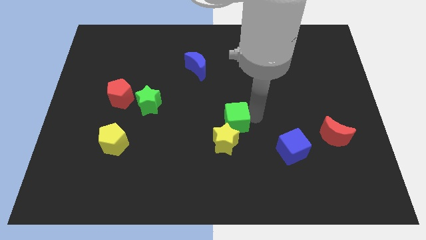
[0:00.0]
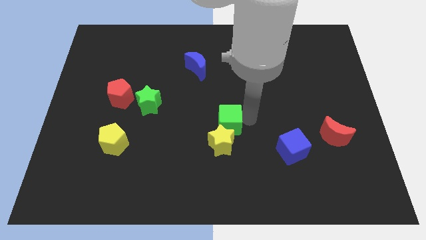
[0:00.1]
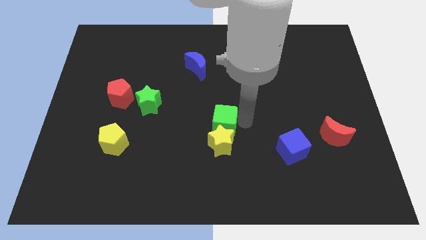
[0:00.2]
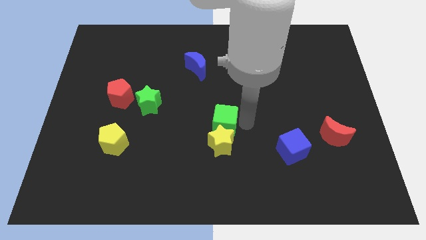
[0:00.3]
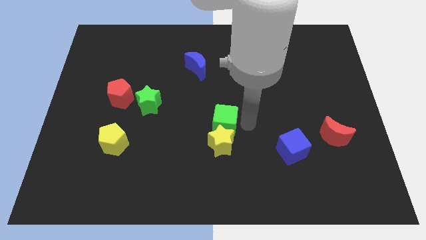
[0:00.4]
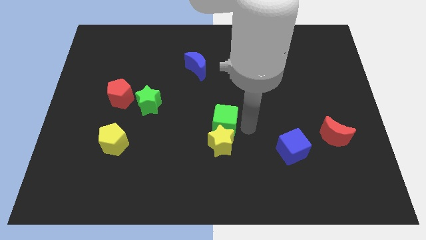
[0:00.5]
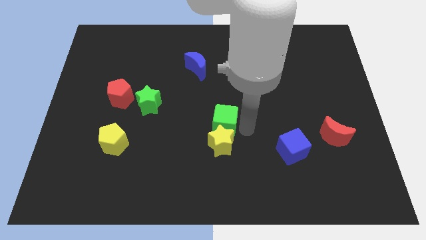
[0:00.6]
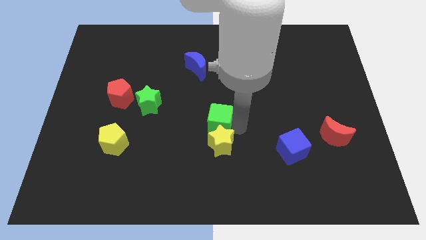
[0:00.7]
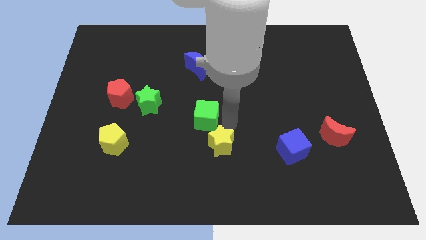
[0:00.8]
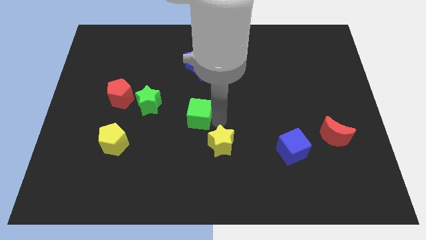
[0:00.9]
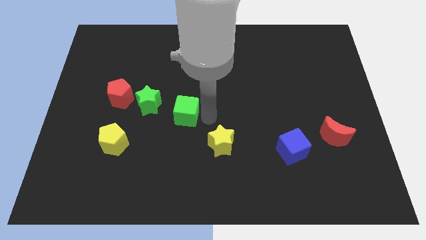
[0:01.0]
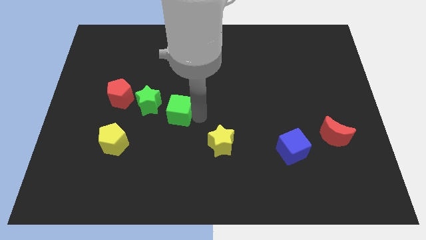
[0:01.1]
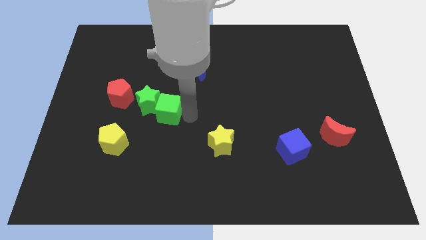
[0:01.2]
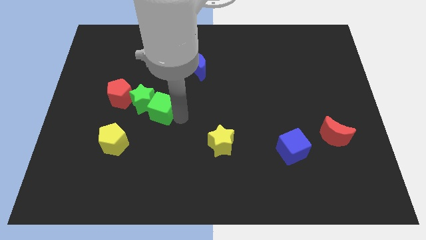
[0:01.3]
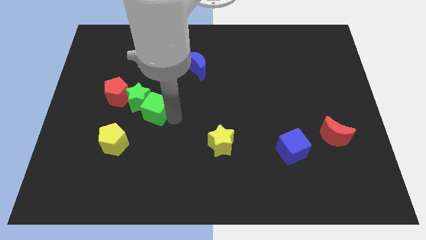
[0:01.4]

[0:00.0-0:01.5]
push the green cube to the bottom right side of the green star

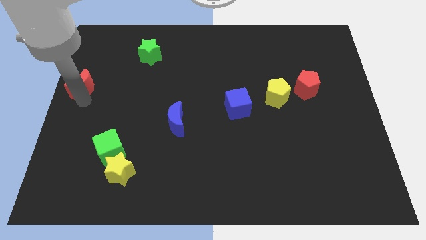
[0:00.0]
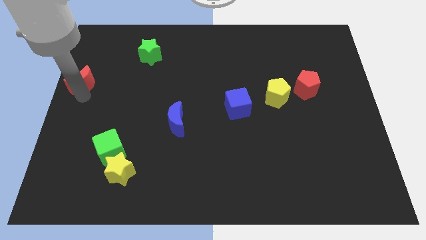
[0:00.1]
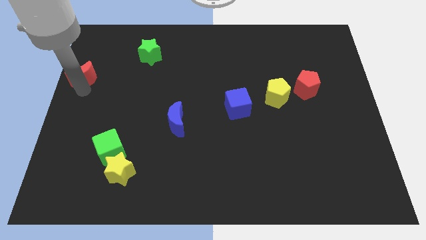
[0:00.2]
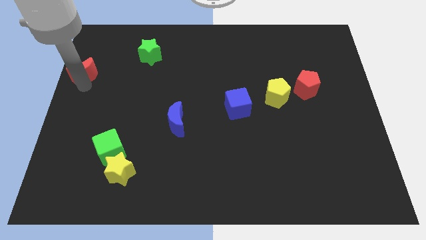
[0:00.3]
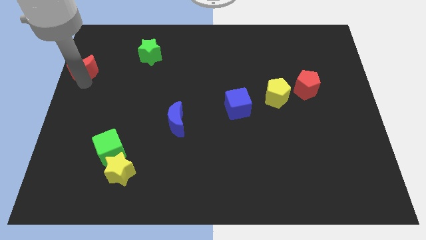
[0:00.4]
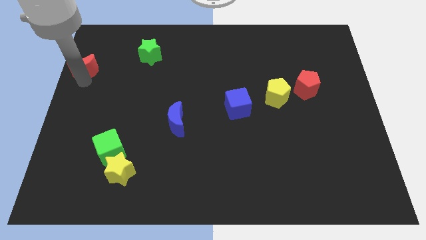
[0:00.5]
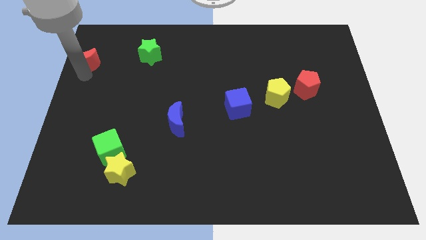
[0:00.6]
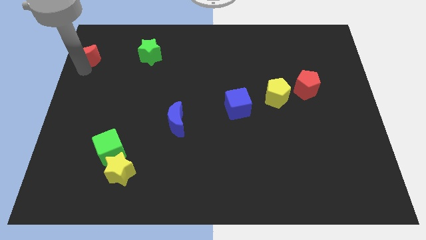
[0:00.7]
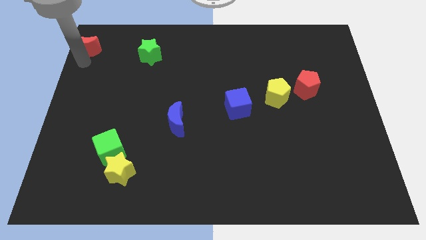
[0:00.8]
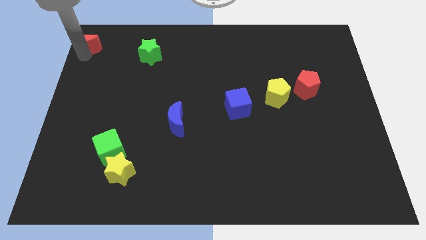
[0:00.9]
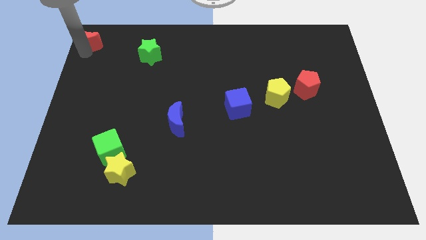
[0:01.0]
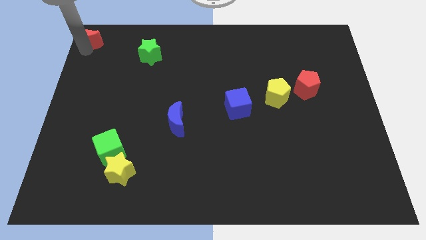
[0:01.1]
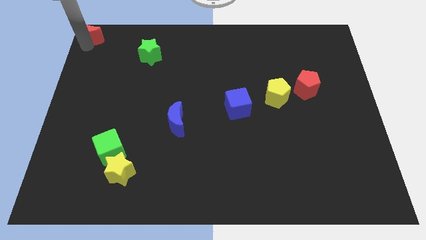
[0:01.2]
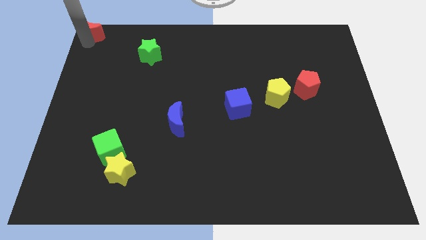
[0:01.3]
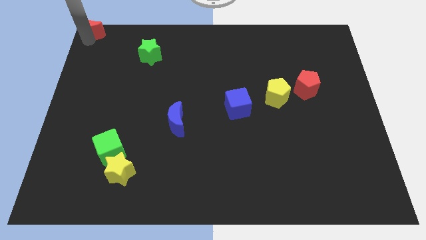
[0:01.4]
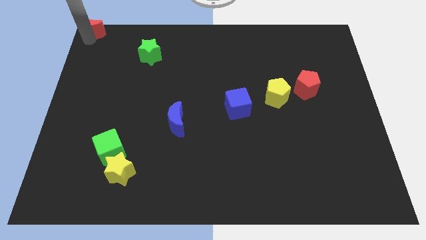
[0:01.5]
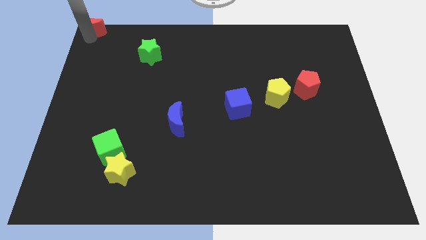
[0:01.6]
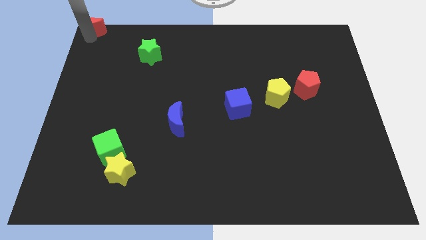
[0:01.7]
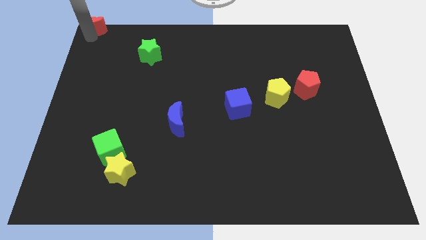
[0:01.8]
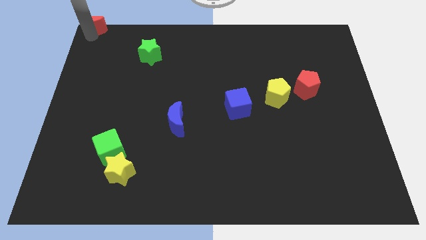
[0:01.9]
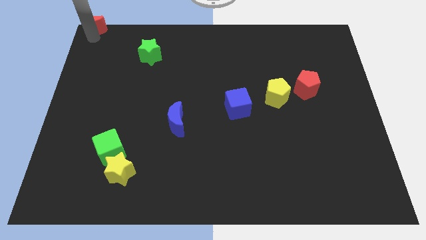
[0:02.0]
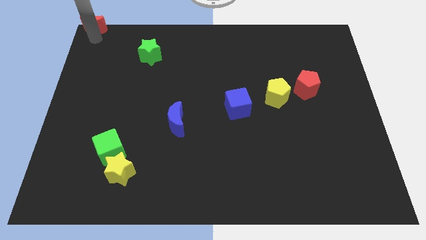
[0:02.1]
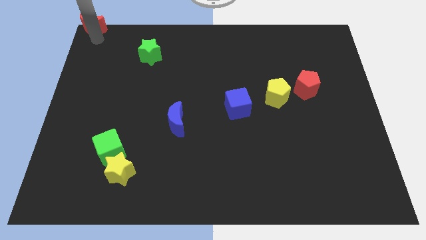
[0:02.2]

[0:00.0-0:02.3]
move the red moon to the top left corner of the board

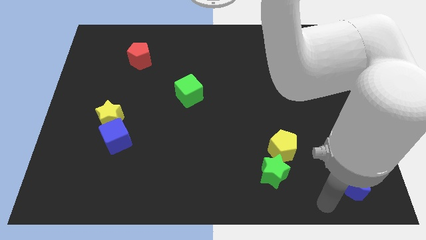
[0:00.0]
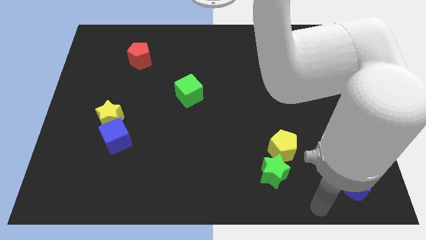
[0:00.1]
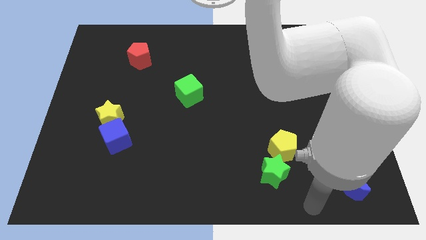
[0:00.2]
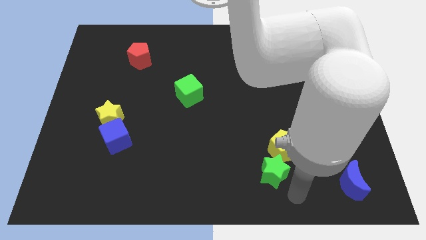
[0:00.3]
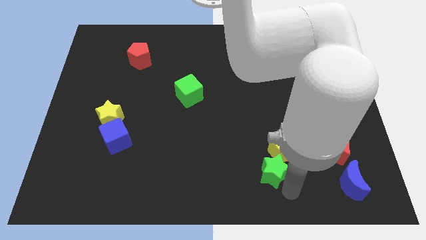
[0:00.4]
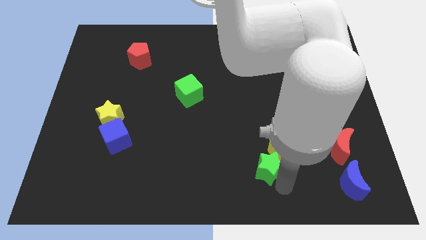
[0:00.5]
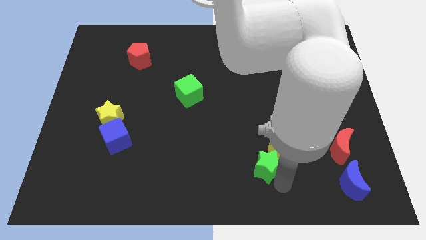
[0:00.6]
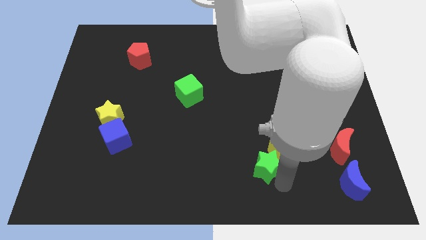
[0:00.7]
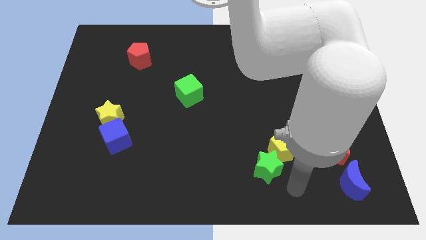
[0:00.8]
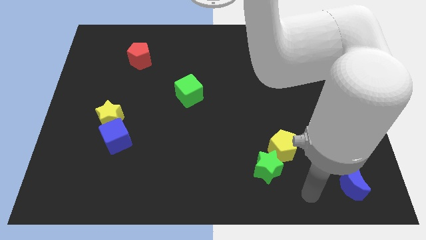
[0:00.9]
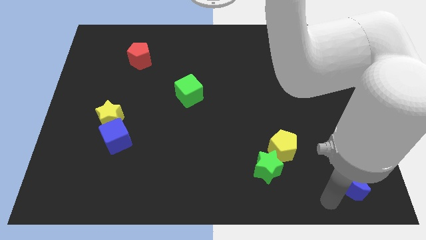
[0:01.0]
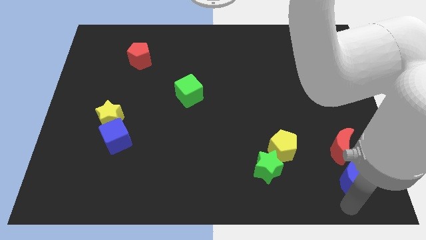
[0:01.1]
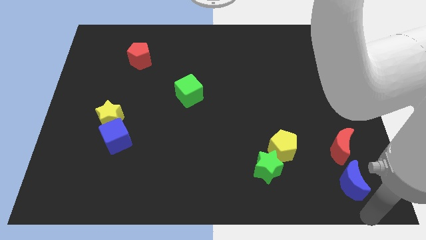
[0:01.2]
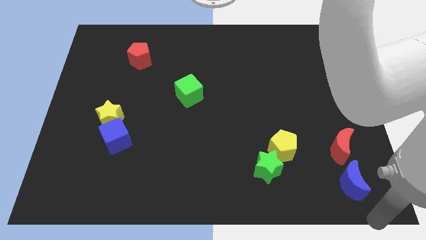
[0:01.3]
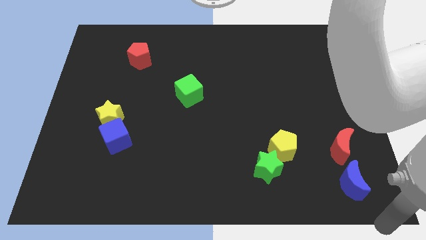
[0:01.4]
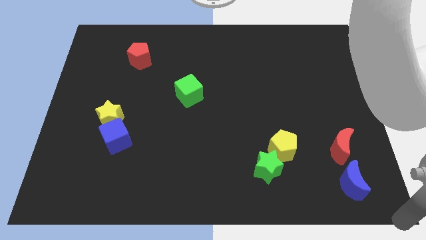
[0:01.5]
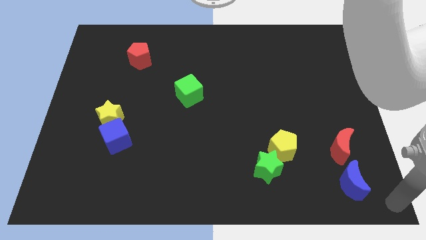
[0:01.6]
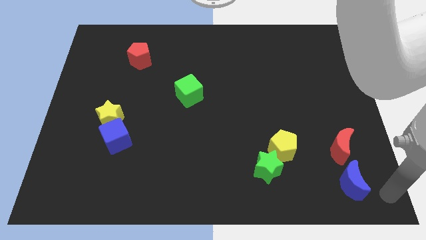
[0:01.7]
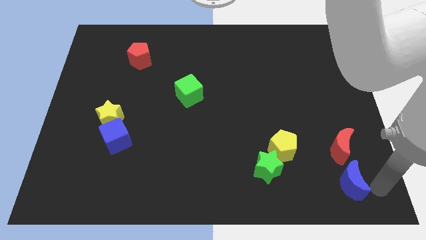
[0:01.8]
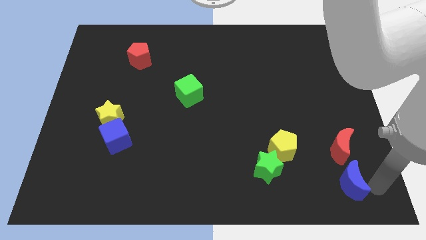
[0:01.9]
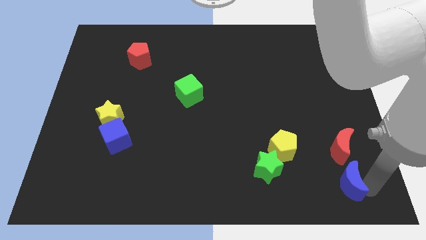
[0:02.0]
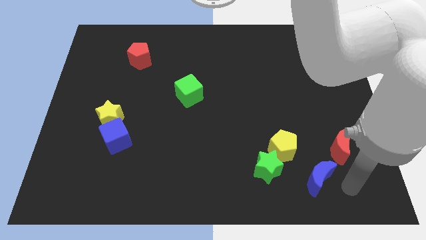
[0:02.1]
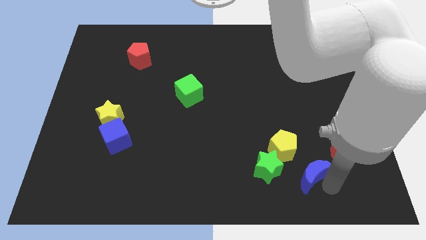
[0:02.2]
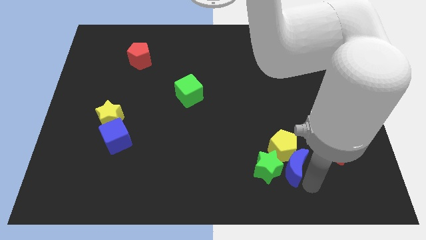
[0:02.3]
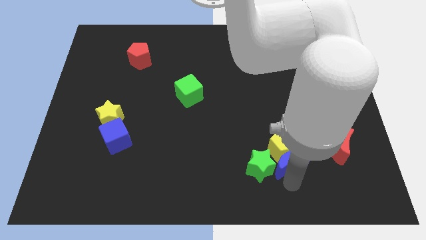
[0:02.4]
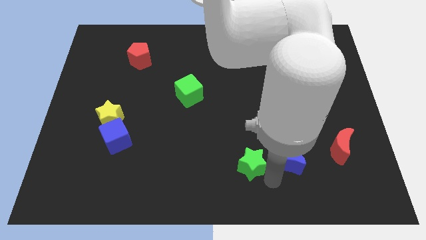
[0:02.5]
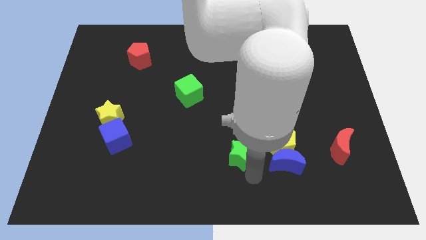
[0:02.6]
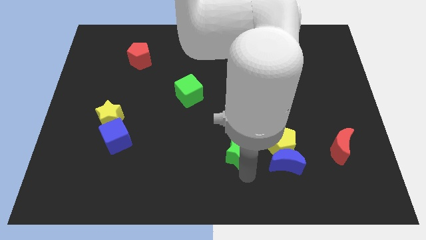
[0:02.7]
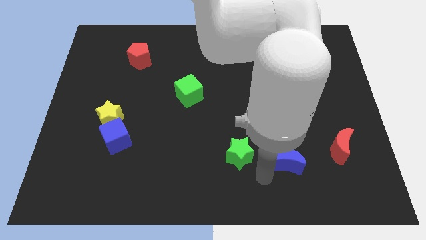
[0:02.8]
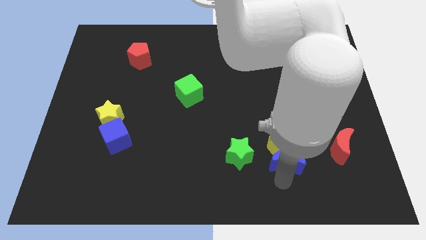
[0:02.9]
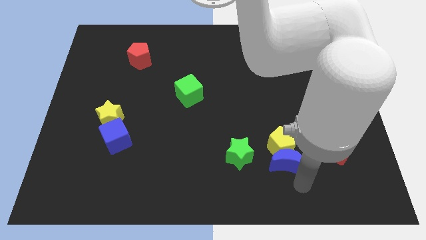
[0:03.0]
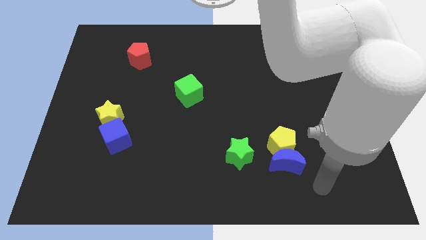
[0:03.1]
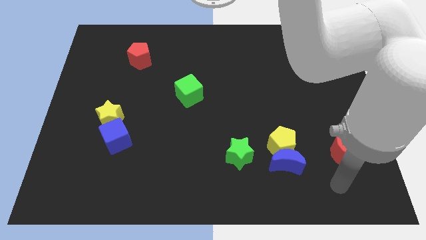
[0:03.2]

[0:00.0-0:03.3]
move the blue crescent towards the yellow pentagon

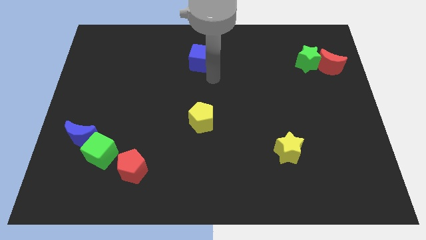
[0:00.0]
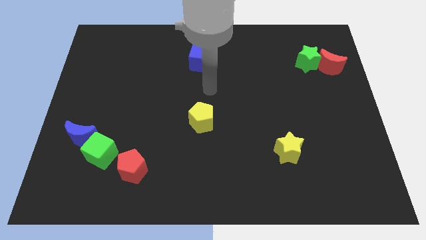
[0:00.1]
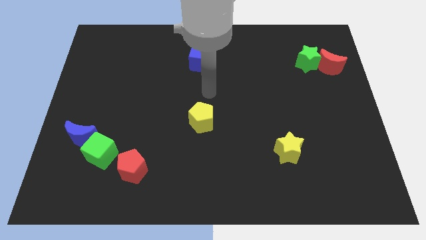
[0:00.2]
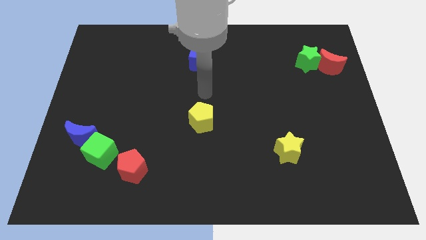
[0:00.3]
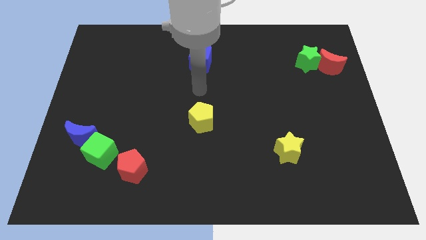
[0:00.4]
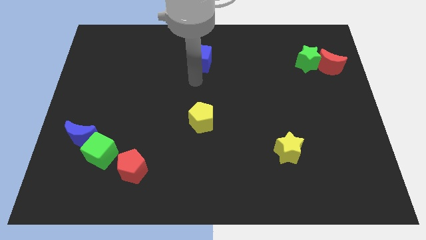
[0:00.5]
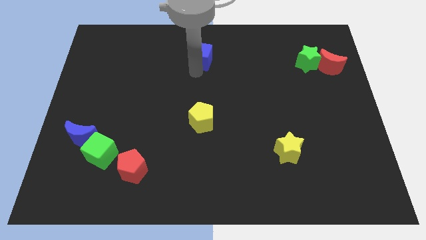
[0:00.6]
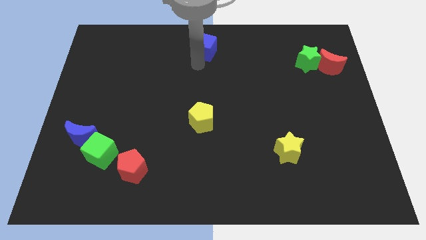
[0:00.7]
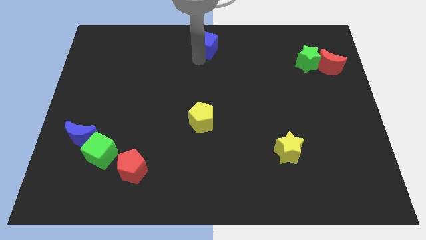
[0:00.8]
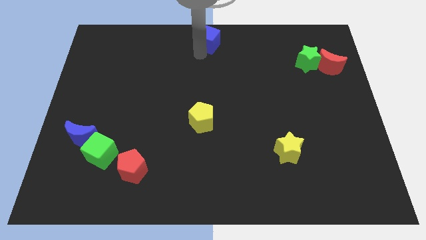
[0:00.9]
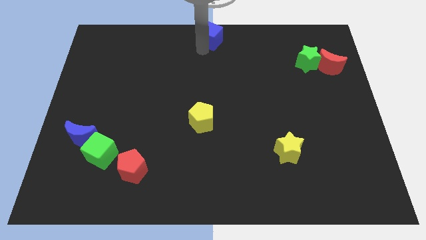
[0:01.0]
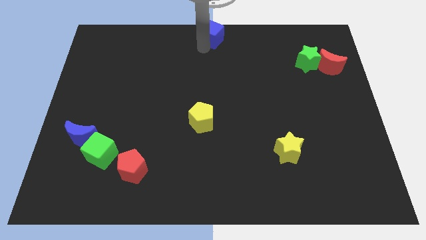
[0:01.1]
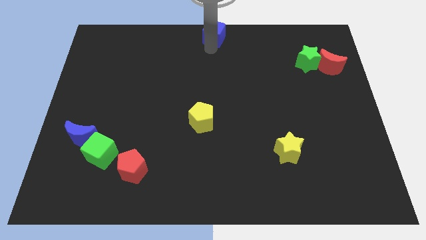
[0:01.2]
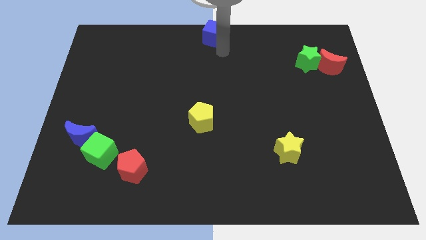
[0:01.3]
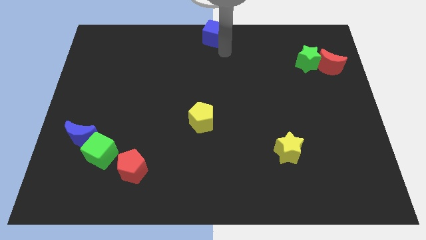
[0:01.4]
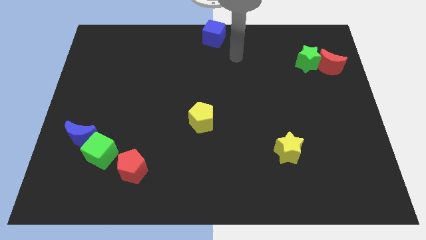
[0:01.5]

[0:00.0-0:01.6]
place the blue cube towards the top center of the board

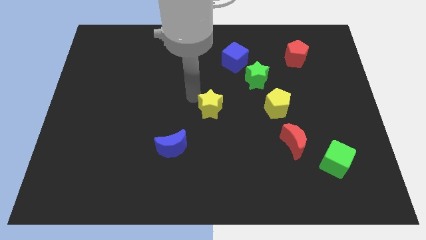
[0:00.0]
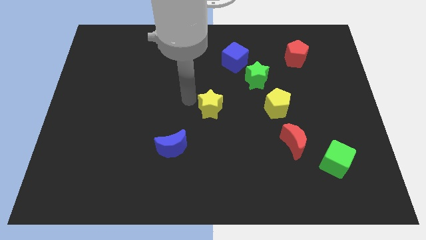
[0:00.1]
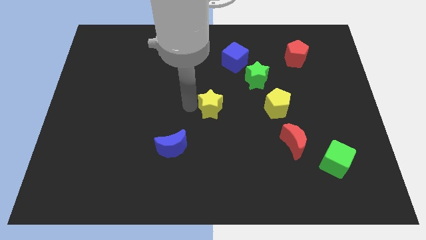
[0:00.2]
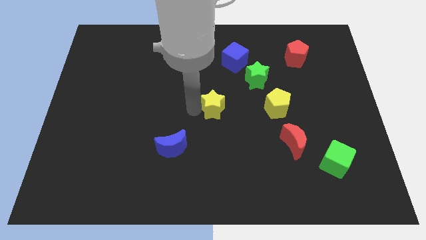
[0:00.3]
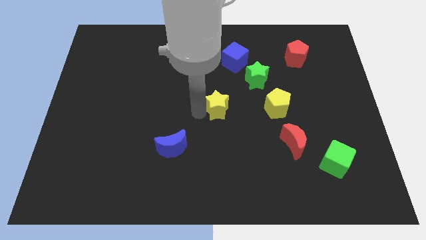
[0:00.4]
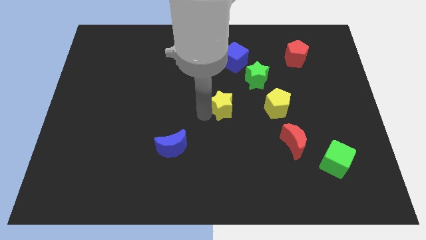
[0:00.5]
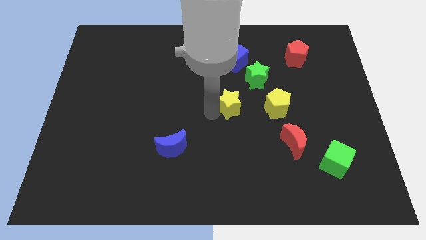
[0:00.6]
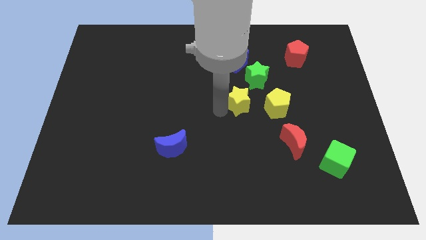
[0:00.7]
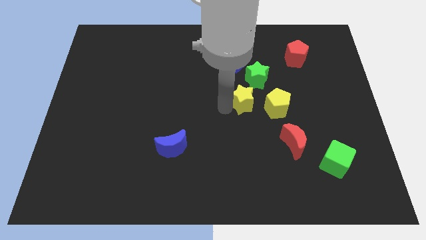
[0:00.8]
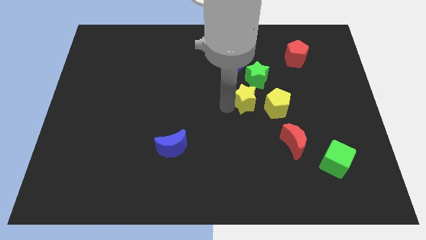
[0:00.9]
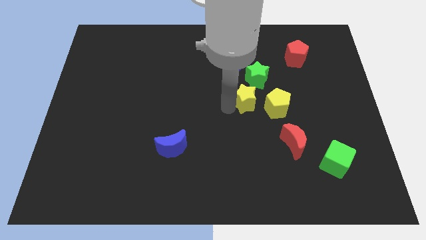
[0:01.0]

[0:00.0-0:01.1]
move the yellow star to the right of the board
